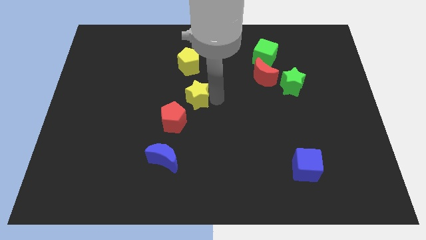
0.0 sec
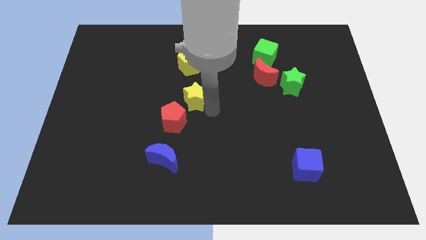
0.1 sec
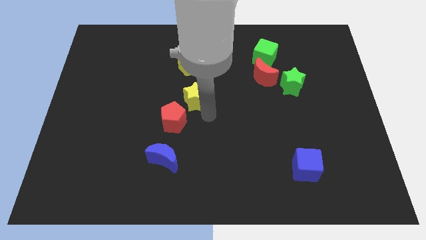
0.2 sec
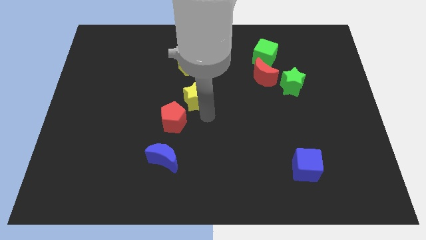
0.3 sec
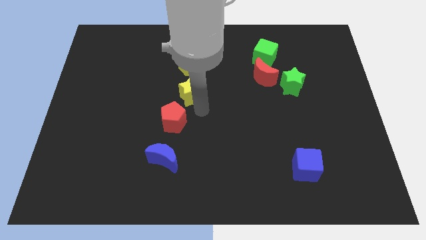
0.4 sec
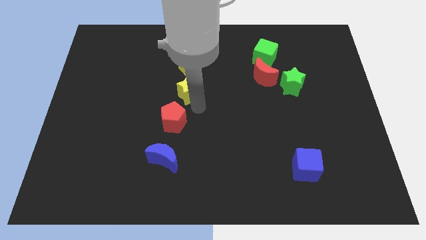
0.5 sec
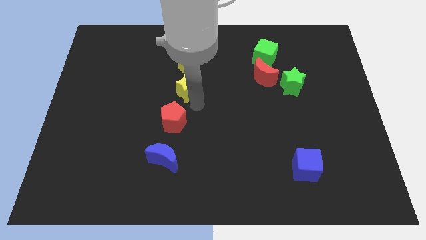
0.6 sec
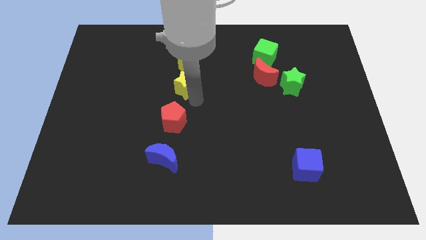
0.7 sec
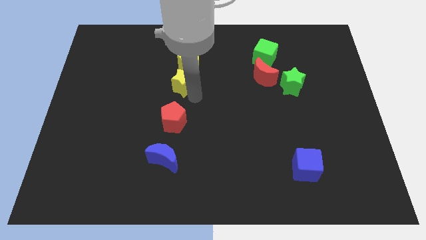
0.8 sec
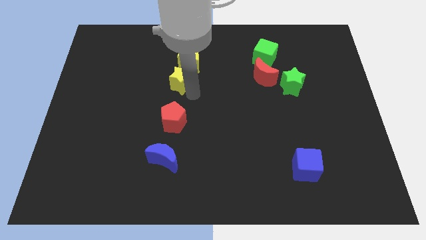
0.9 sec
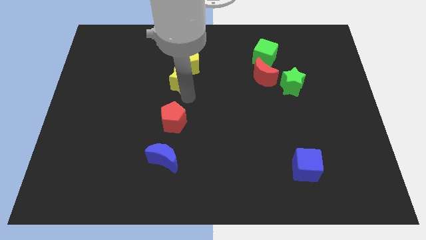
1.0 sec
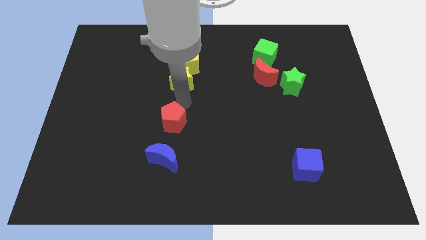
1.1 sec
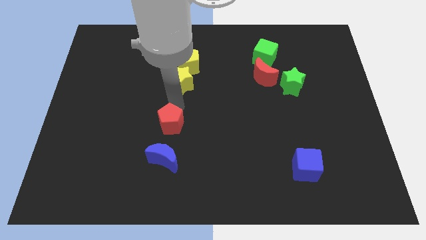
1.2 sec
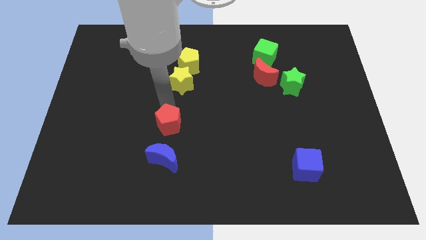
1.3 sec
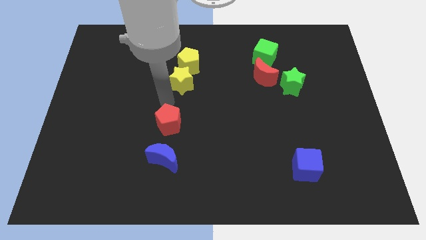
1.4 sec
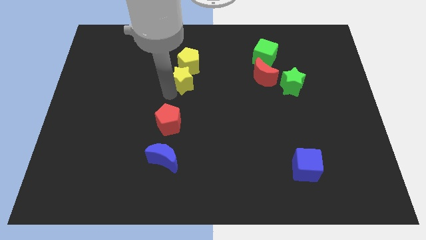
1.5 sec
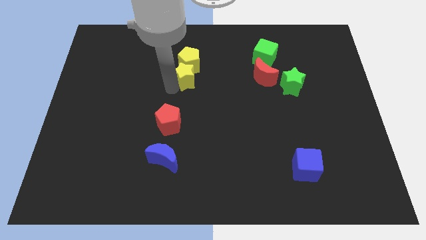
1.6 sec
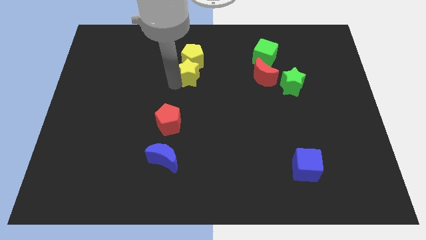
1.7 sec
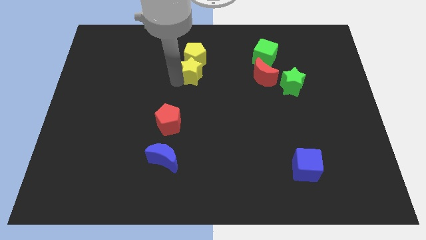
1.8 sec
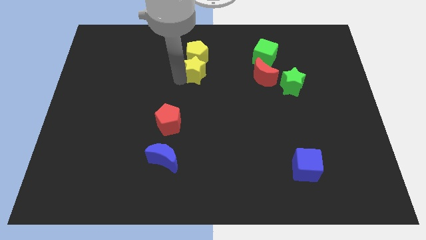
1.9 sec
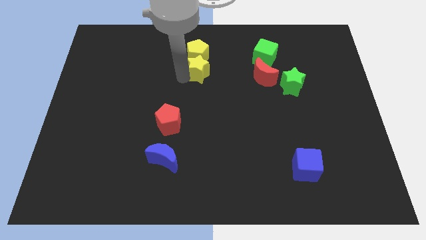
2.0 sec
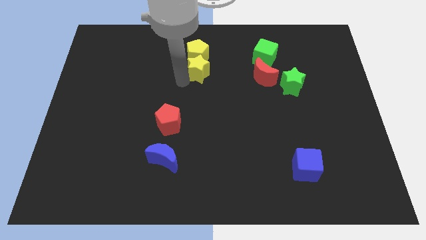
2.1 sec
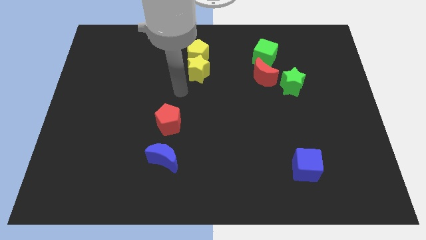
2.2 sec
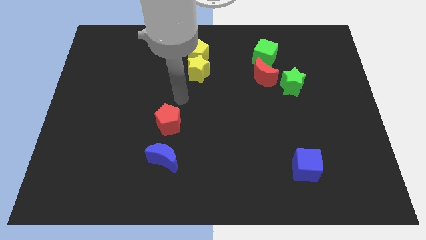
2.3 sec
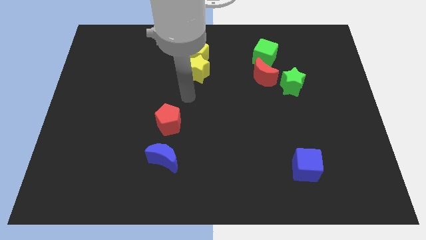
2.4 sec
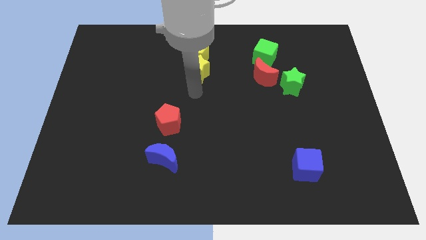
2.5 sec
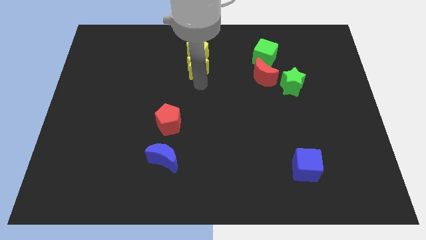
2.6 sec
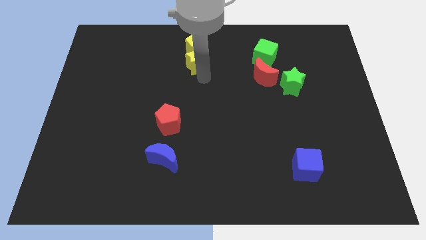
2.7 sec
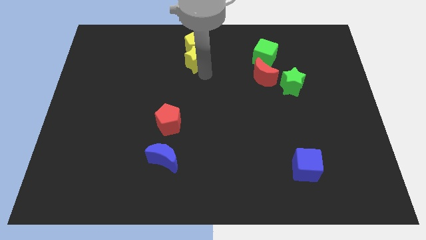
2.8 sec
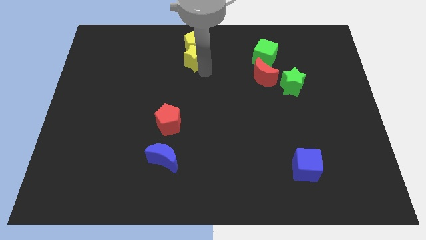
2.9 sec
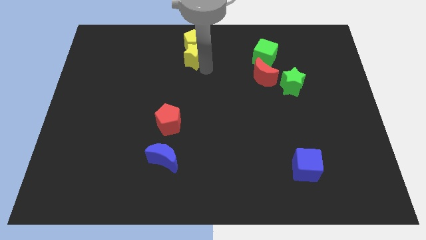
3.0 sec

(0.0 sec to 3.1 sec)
push yellow blocks to the top center

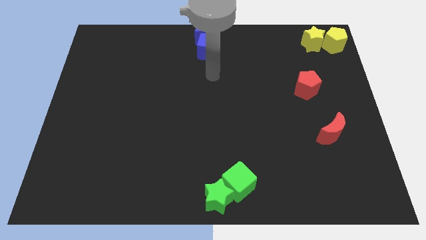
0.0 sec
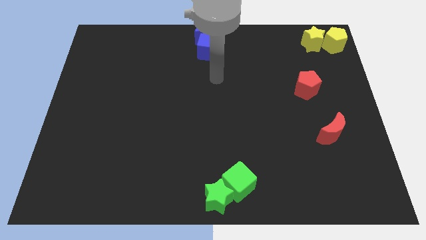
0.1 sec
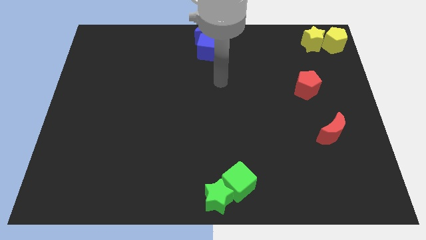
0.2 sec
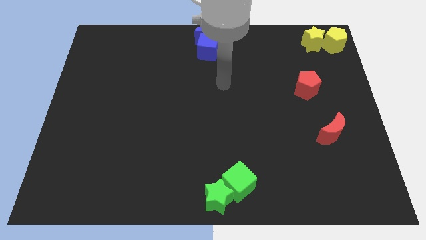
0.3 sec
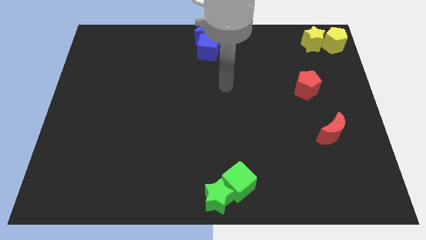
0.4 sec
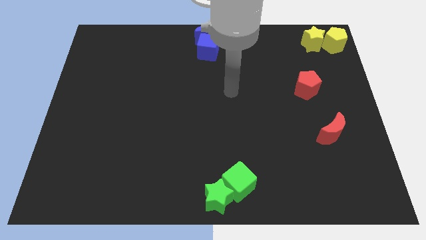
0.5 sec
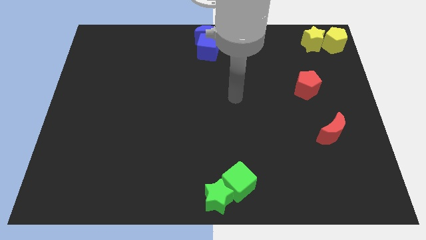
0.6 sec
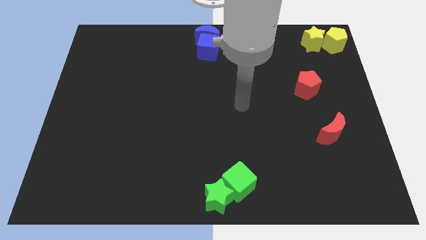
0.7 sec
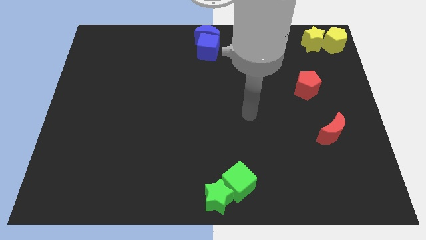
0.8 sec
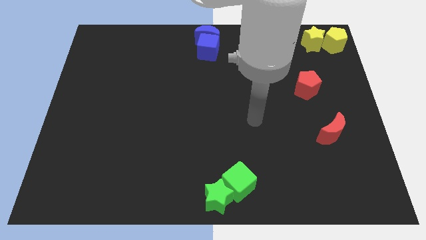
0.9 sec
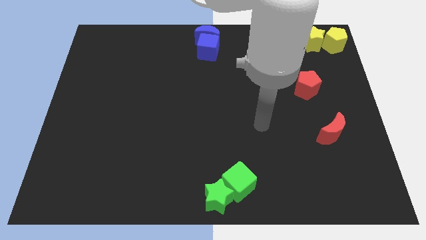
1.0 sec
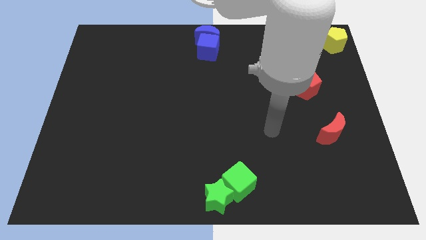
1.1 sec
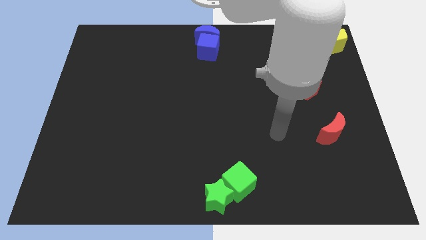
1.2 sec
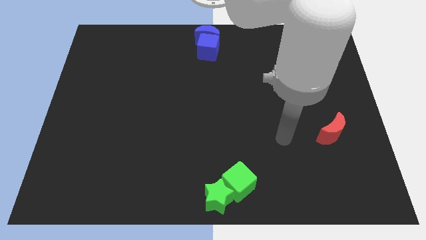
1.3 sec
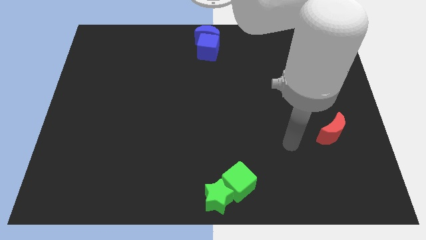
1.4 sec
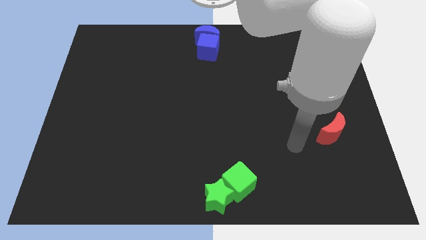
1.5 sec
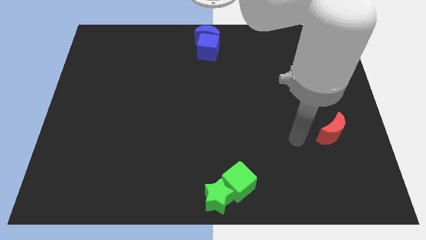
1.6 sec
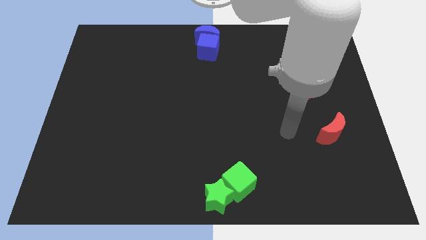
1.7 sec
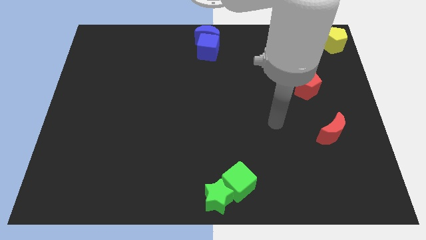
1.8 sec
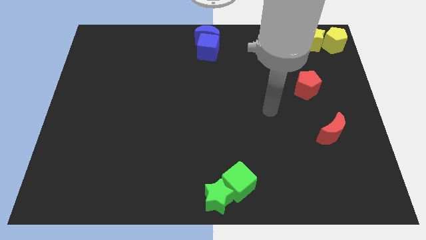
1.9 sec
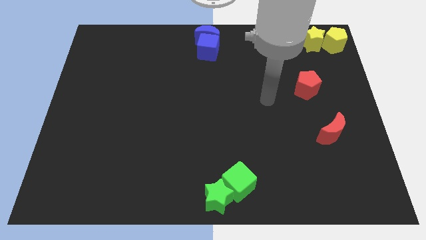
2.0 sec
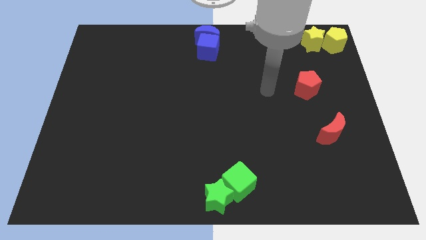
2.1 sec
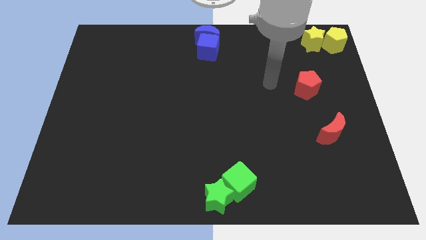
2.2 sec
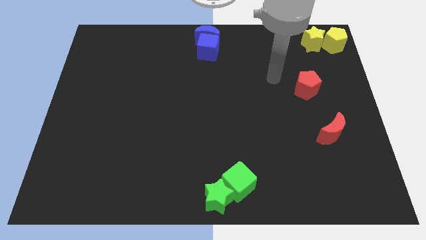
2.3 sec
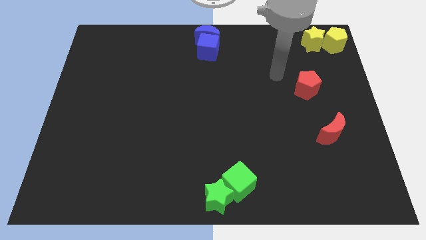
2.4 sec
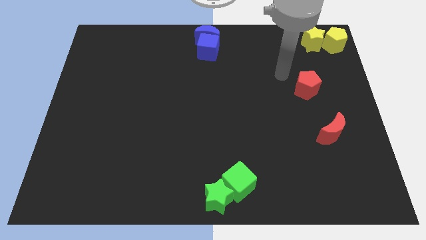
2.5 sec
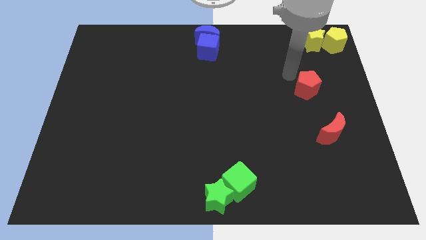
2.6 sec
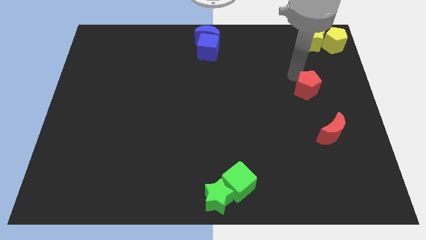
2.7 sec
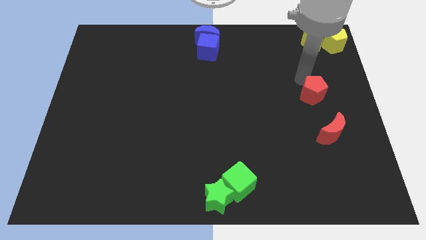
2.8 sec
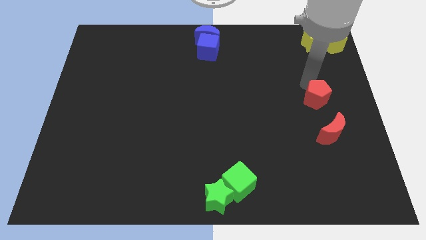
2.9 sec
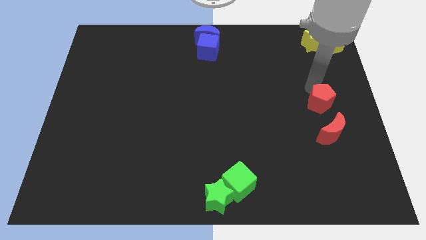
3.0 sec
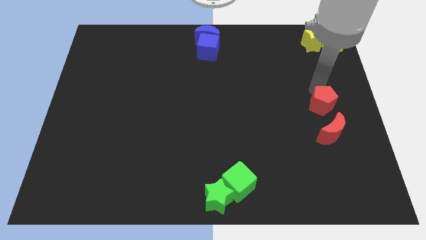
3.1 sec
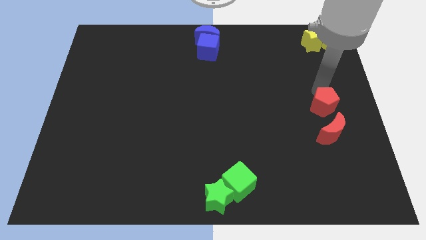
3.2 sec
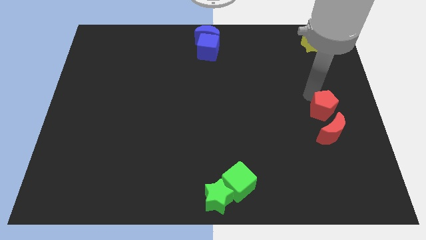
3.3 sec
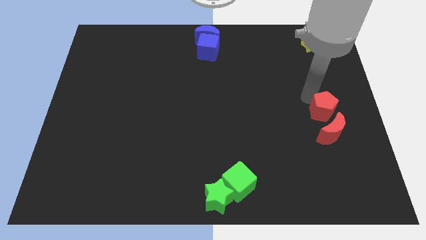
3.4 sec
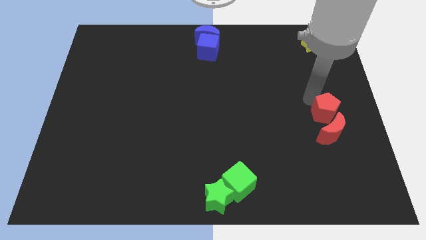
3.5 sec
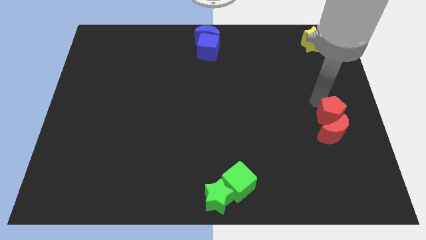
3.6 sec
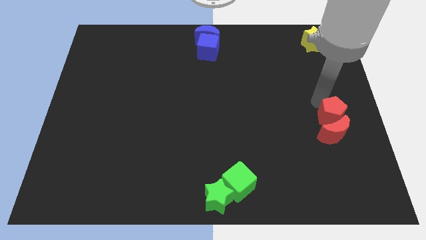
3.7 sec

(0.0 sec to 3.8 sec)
move red pentagon into red moon

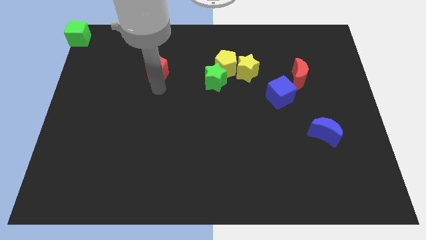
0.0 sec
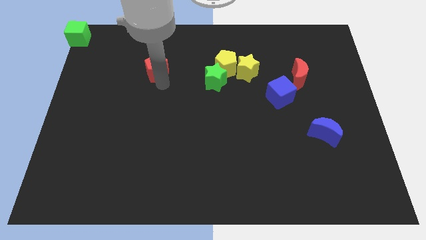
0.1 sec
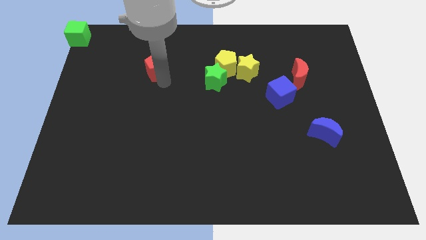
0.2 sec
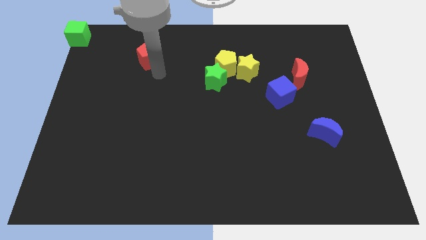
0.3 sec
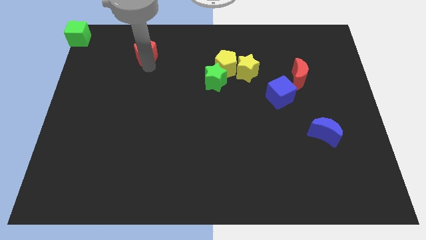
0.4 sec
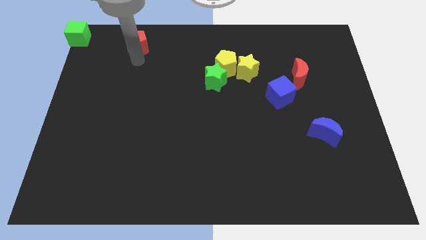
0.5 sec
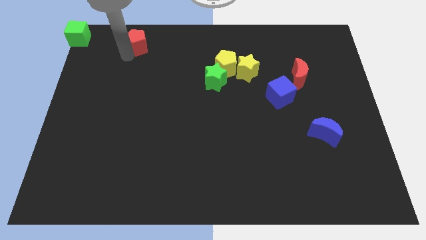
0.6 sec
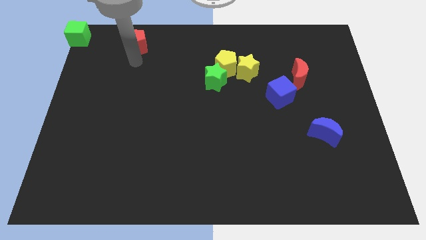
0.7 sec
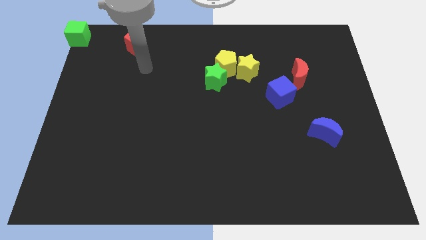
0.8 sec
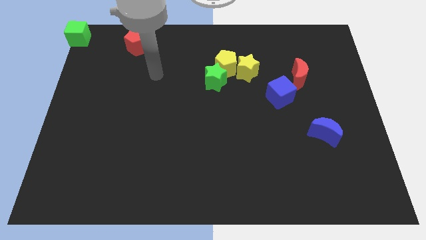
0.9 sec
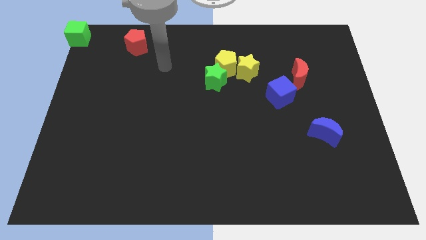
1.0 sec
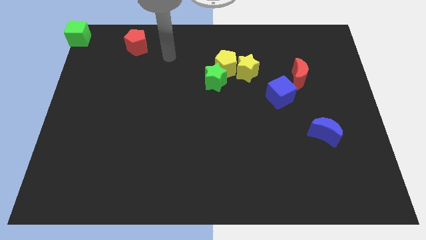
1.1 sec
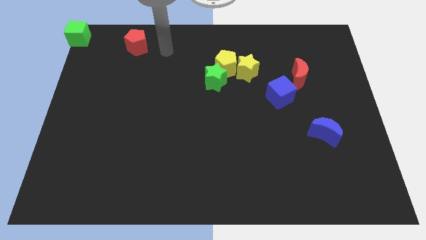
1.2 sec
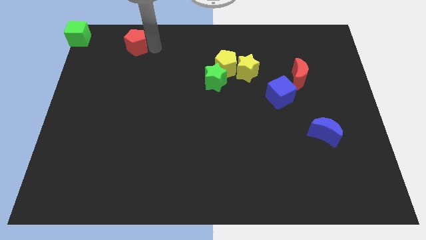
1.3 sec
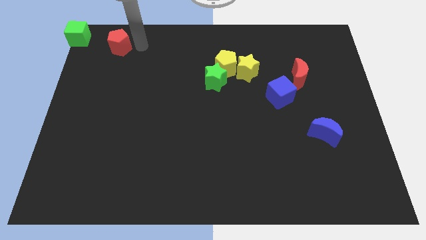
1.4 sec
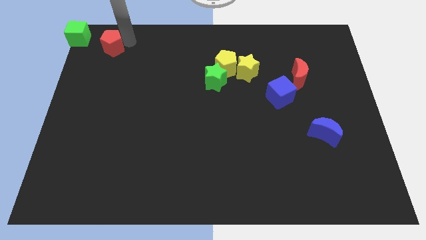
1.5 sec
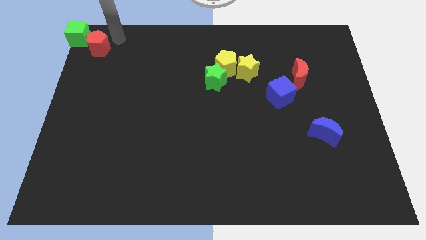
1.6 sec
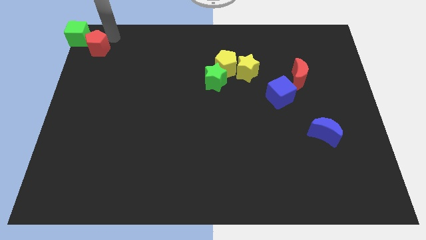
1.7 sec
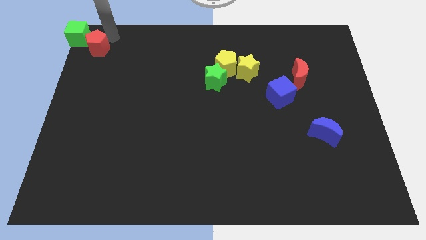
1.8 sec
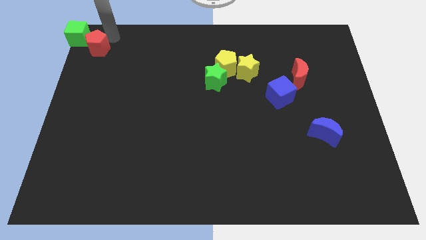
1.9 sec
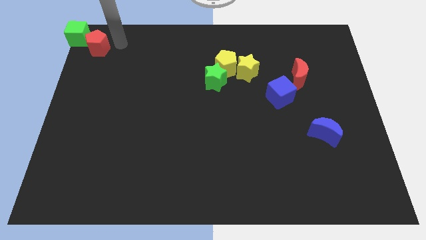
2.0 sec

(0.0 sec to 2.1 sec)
move red pentagon towards the green cube
